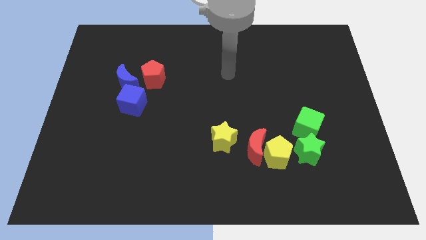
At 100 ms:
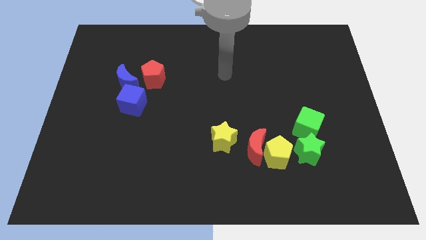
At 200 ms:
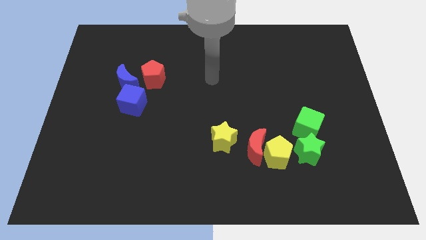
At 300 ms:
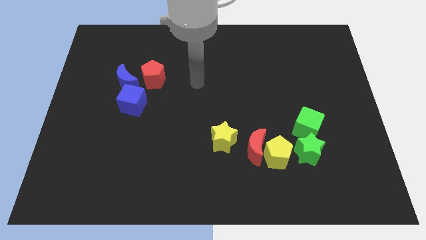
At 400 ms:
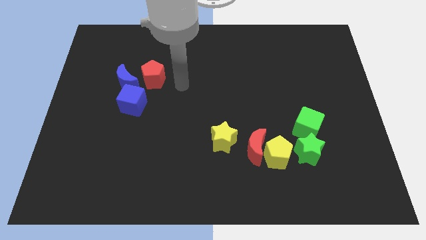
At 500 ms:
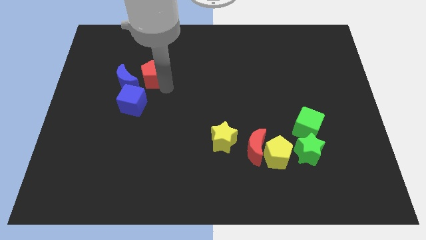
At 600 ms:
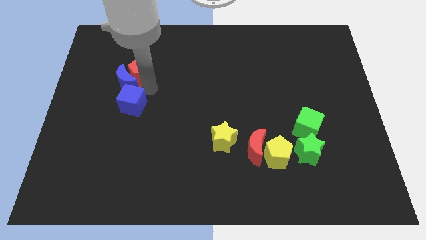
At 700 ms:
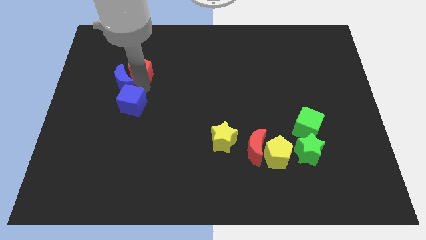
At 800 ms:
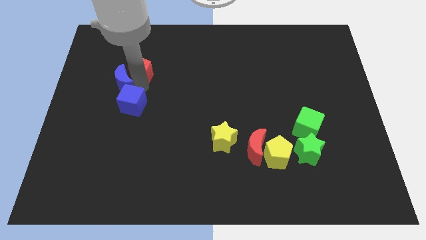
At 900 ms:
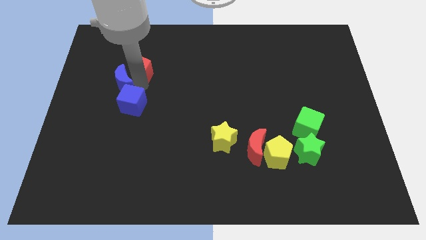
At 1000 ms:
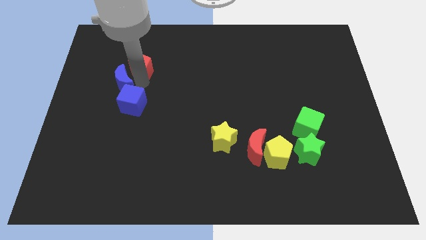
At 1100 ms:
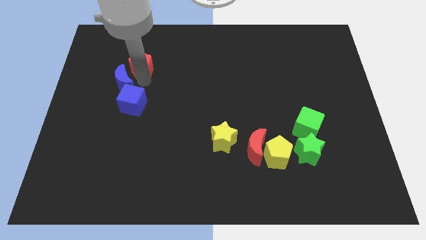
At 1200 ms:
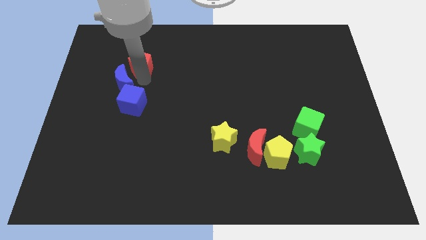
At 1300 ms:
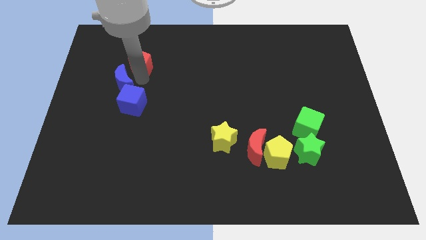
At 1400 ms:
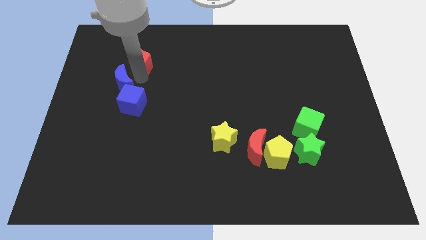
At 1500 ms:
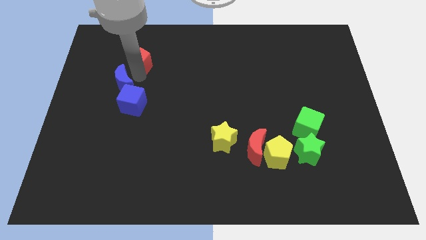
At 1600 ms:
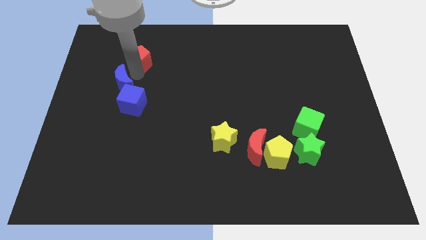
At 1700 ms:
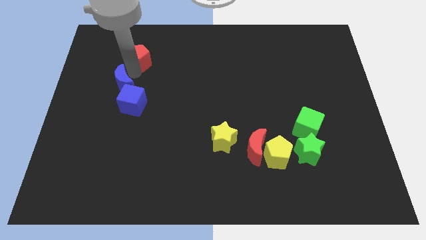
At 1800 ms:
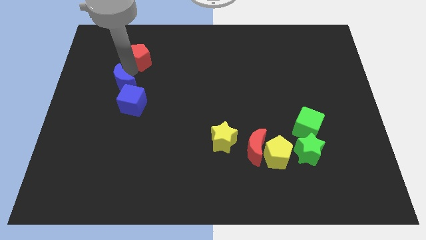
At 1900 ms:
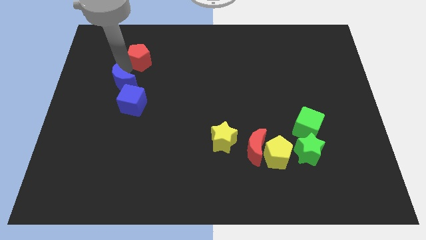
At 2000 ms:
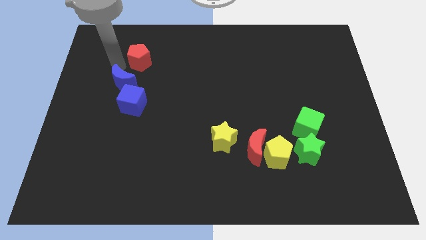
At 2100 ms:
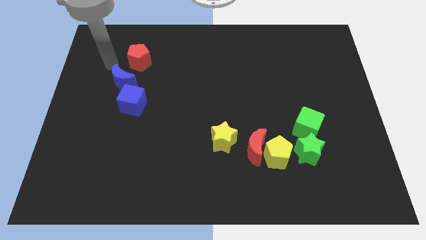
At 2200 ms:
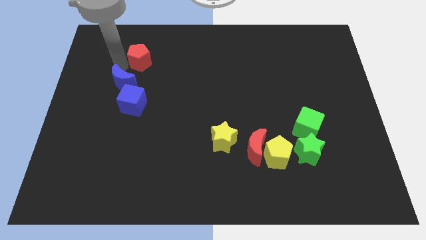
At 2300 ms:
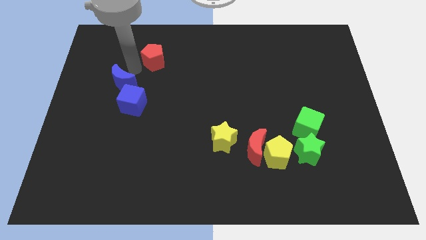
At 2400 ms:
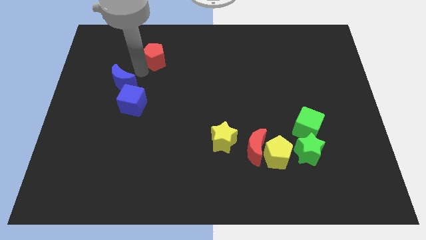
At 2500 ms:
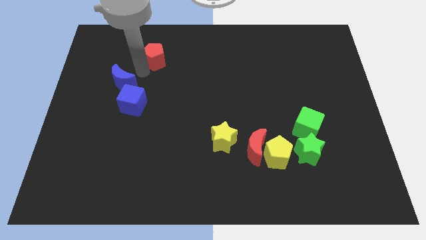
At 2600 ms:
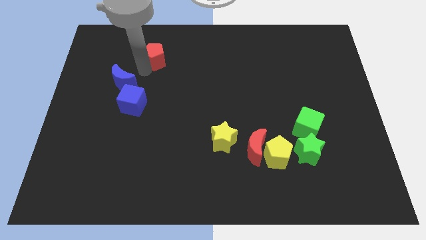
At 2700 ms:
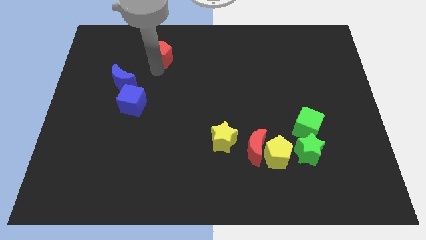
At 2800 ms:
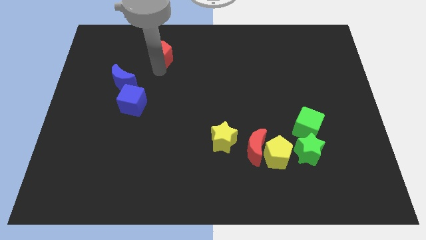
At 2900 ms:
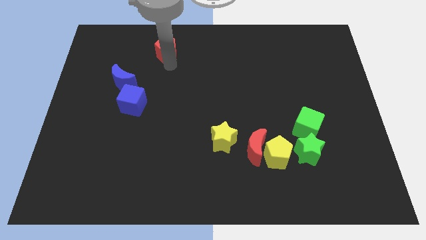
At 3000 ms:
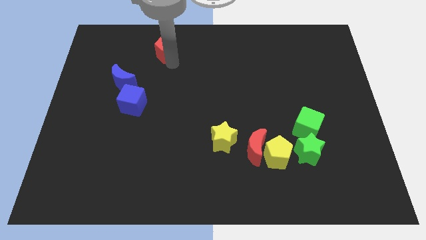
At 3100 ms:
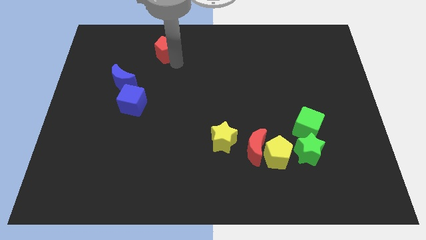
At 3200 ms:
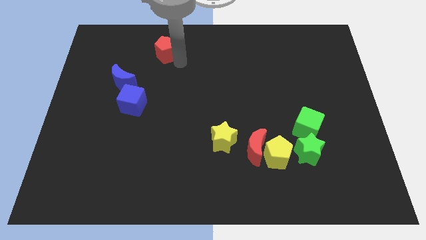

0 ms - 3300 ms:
push the red pentagon to the top side

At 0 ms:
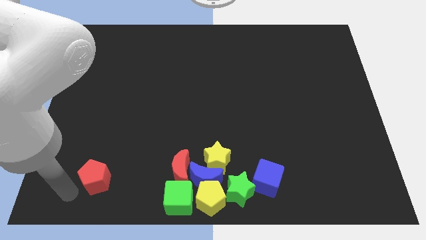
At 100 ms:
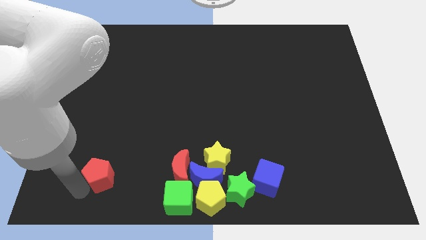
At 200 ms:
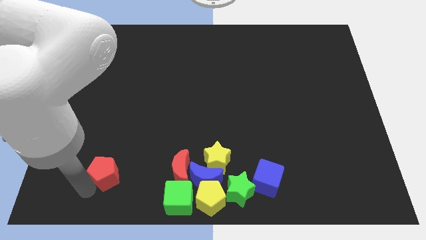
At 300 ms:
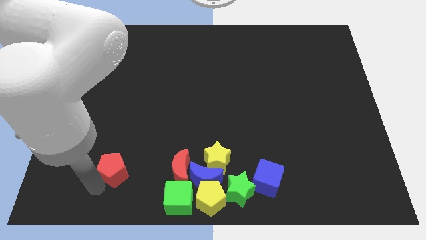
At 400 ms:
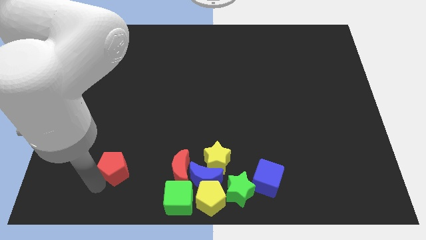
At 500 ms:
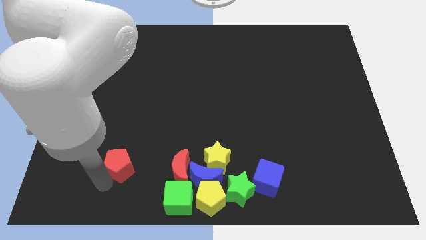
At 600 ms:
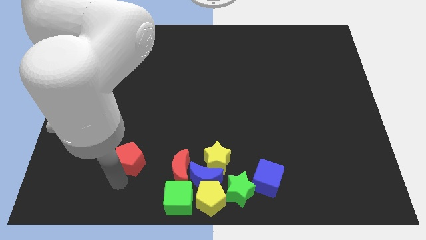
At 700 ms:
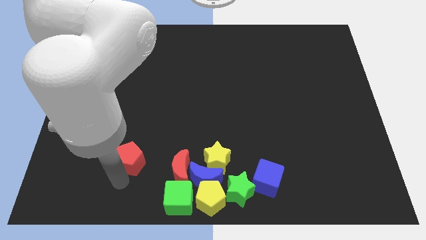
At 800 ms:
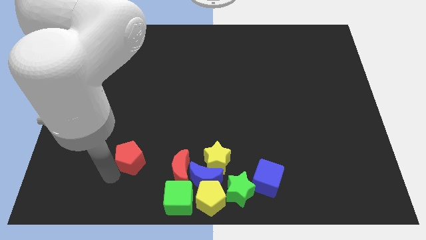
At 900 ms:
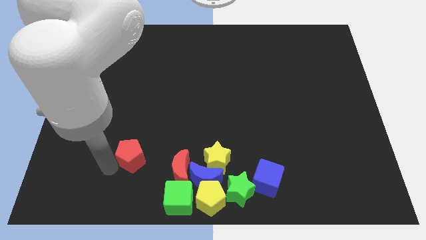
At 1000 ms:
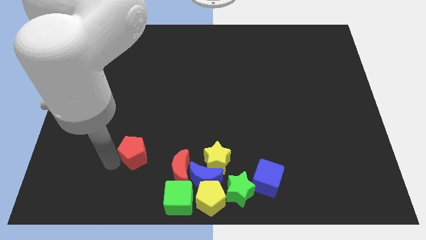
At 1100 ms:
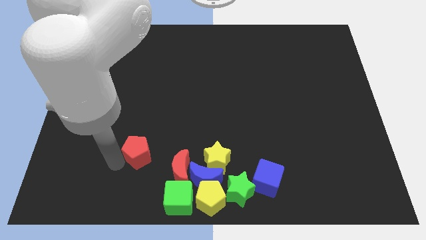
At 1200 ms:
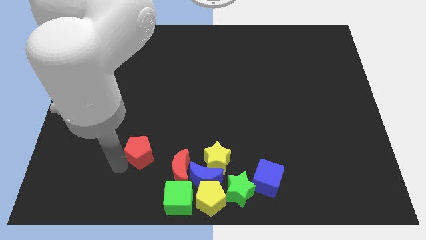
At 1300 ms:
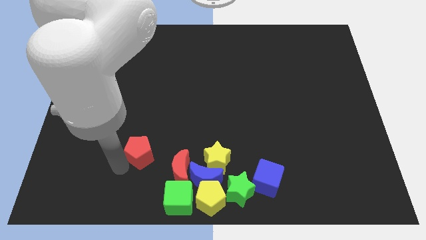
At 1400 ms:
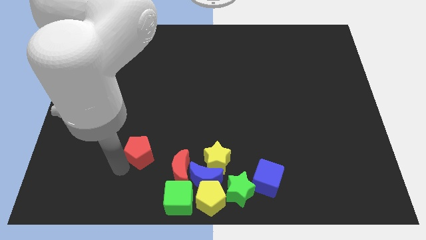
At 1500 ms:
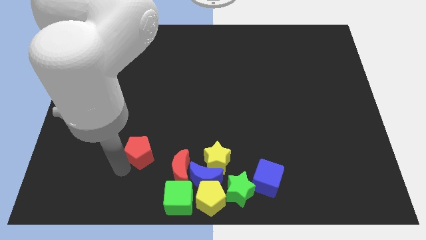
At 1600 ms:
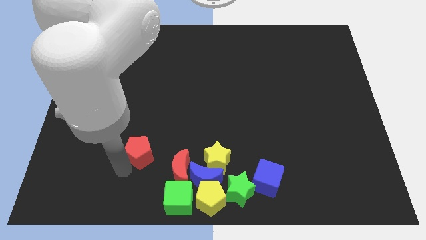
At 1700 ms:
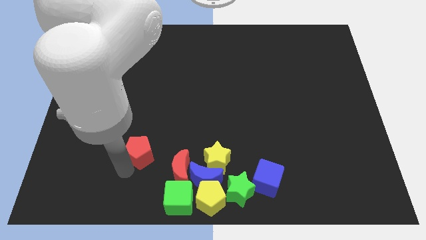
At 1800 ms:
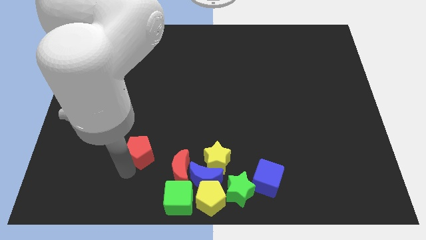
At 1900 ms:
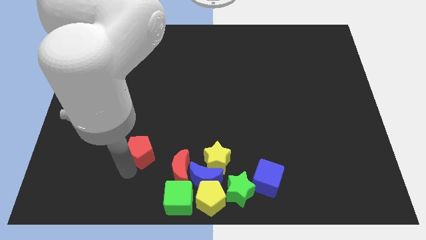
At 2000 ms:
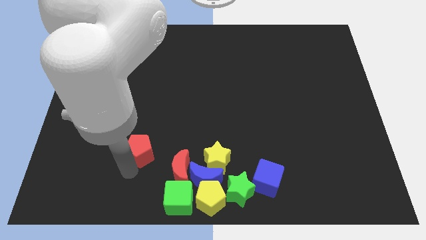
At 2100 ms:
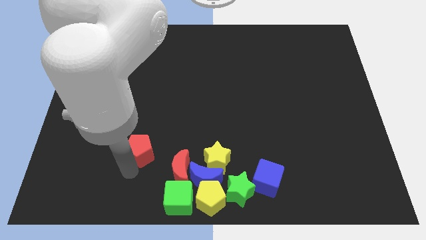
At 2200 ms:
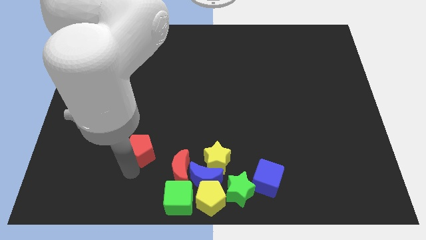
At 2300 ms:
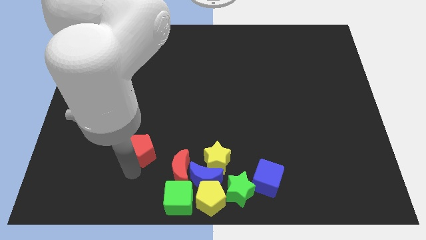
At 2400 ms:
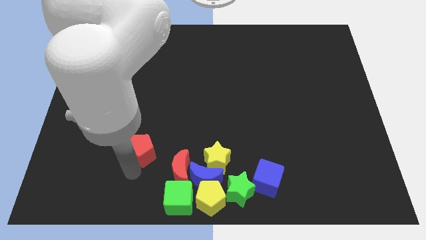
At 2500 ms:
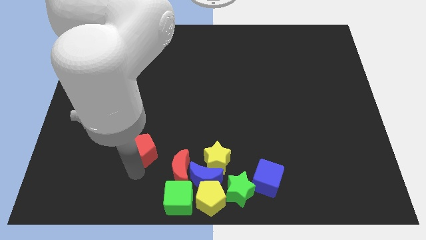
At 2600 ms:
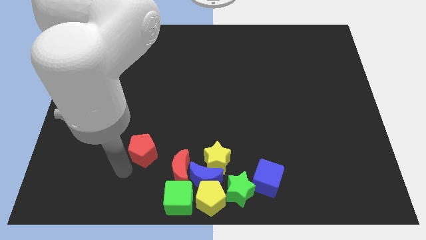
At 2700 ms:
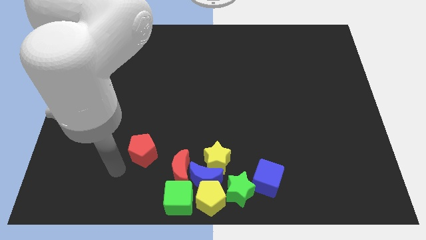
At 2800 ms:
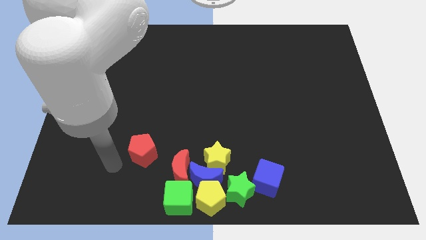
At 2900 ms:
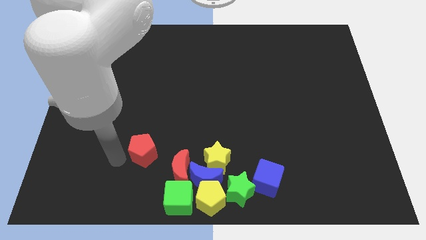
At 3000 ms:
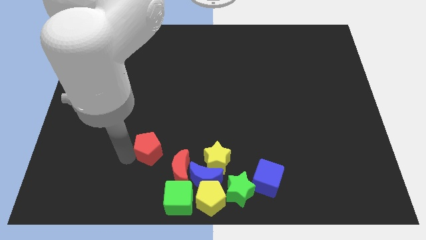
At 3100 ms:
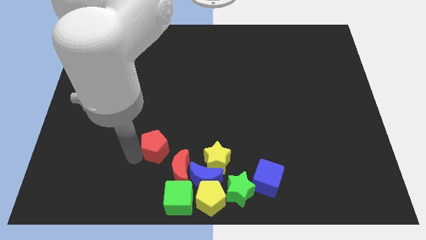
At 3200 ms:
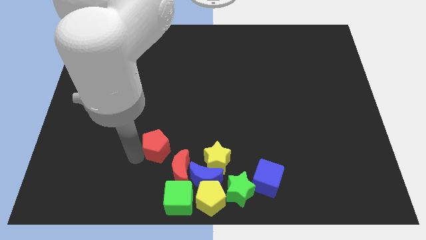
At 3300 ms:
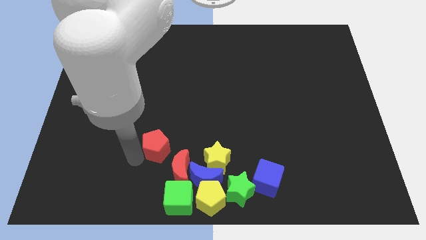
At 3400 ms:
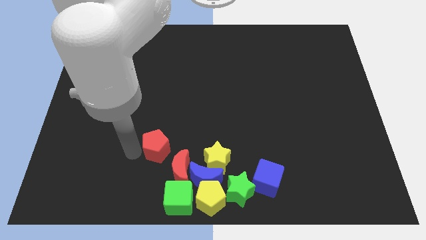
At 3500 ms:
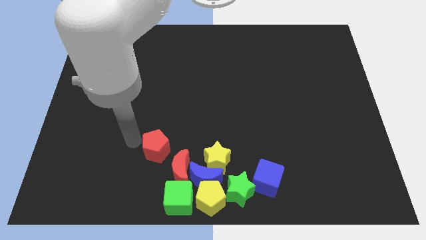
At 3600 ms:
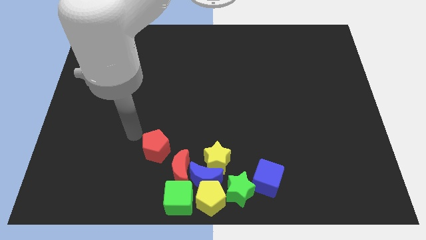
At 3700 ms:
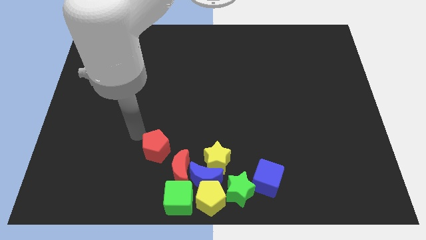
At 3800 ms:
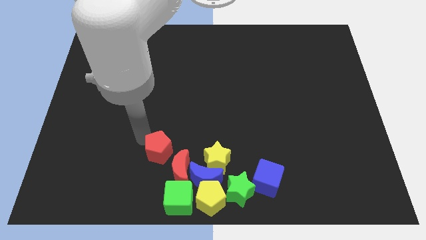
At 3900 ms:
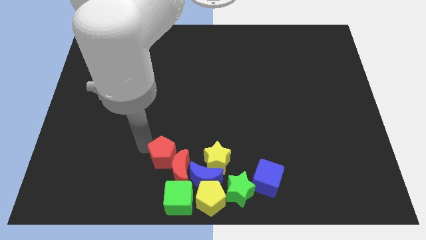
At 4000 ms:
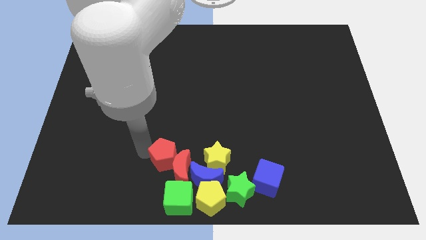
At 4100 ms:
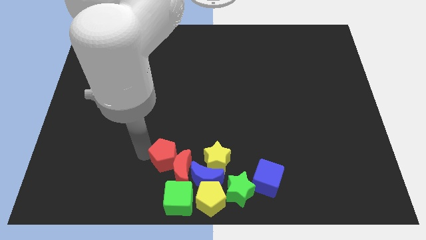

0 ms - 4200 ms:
push the red pentagon into the red moon

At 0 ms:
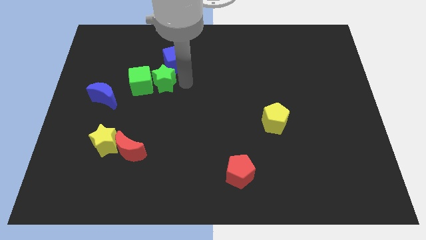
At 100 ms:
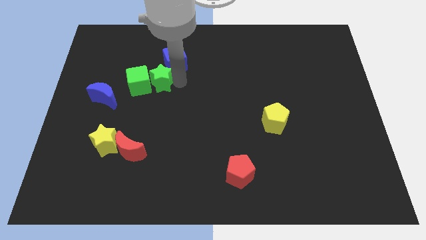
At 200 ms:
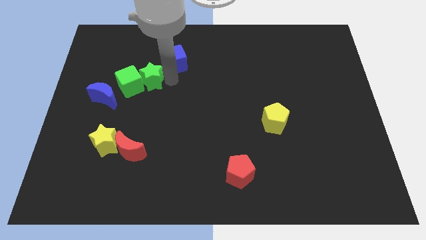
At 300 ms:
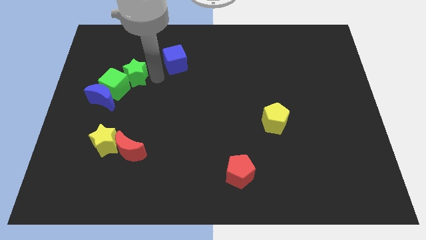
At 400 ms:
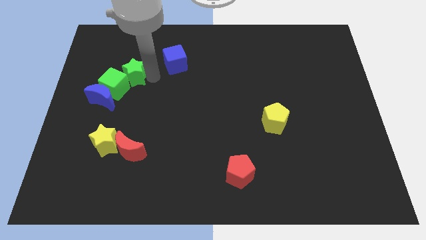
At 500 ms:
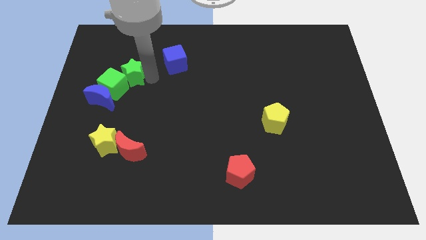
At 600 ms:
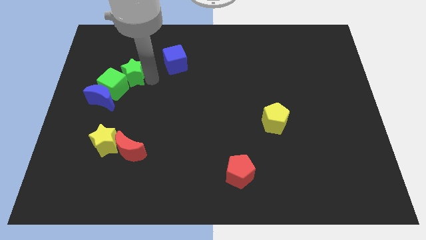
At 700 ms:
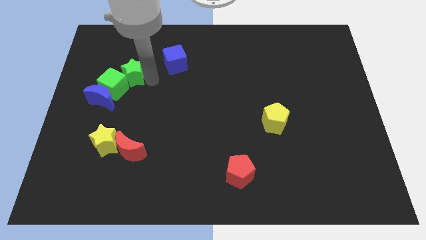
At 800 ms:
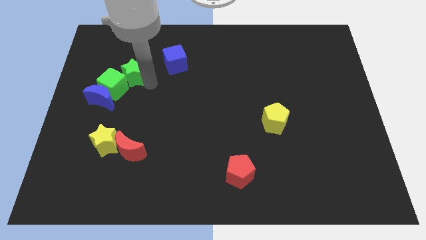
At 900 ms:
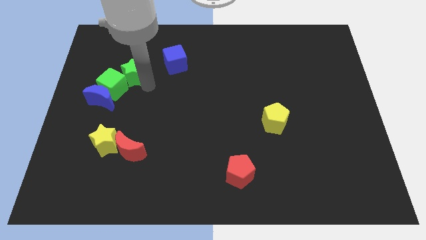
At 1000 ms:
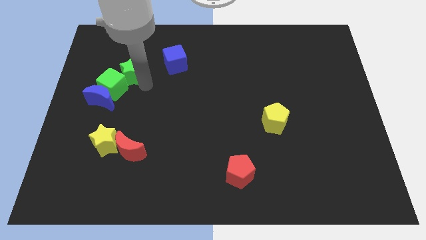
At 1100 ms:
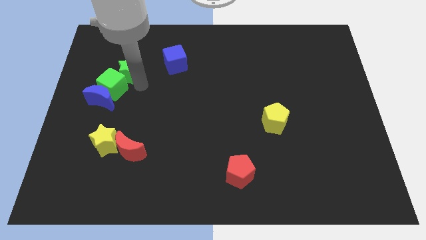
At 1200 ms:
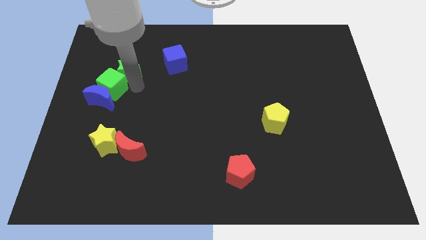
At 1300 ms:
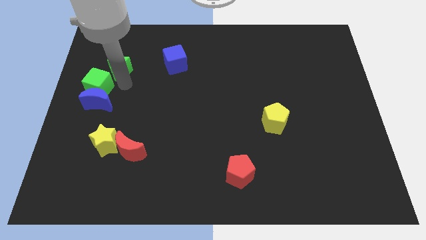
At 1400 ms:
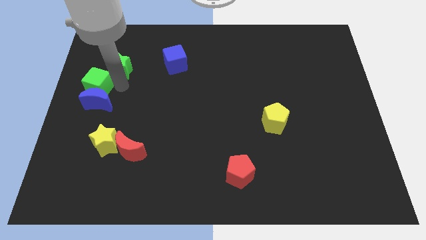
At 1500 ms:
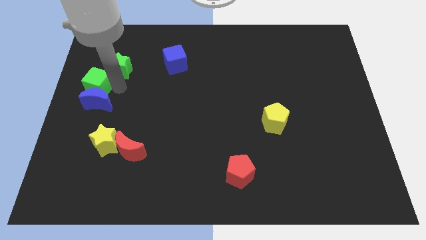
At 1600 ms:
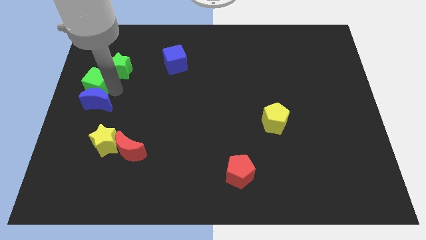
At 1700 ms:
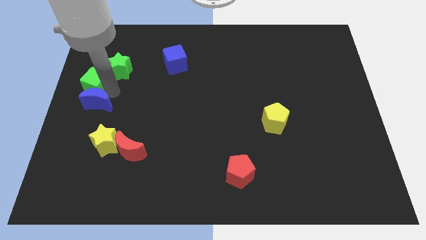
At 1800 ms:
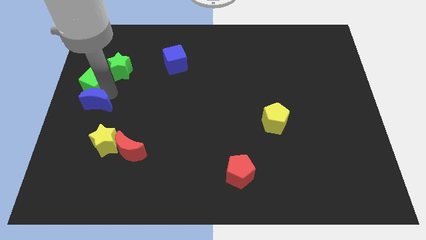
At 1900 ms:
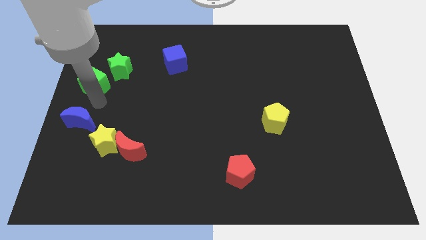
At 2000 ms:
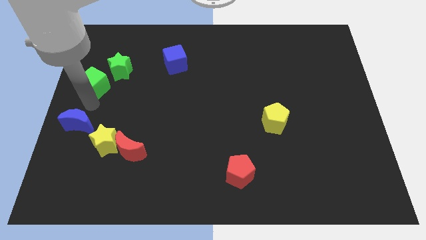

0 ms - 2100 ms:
move the green cube slightly towards the top left
